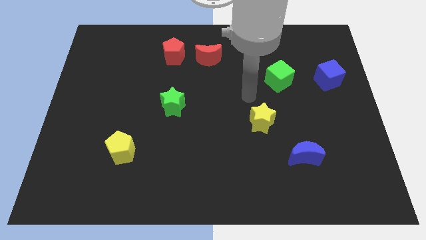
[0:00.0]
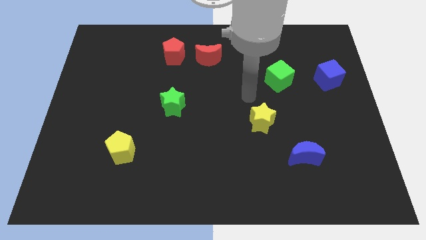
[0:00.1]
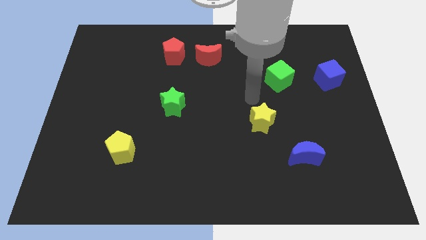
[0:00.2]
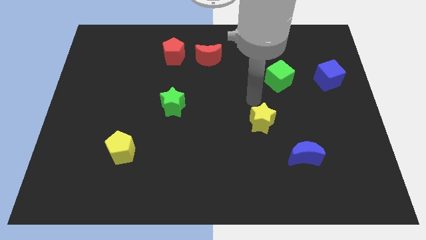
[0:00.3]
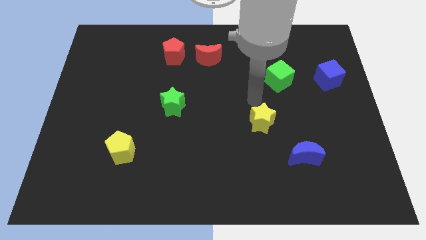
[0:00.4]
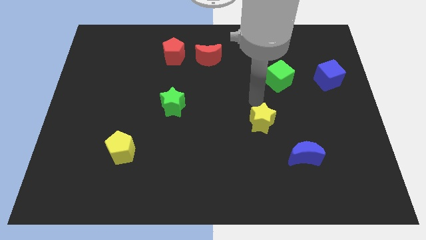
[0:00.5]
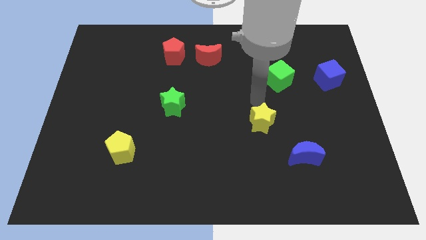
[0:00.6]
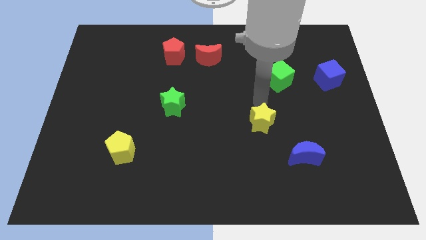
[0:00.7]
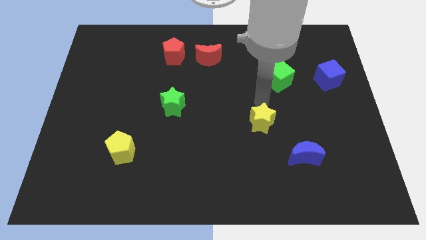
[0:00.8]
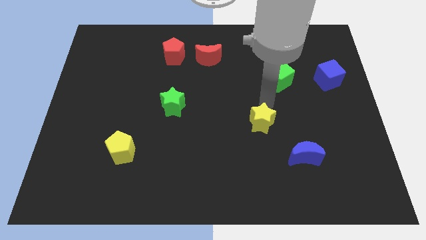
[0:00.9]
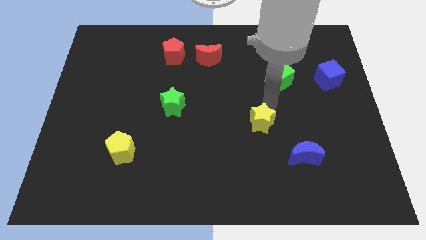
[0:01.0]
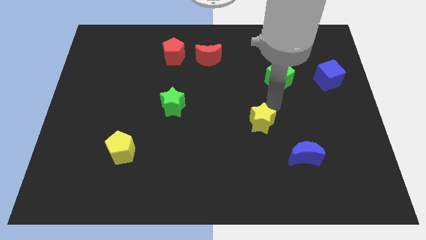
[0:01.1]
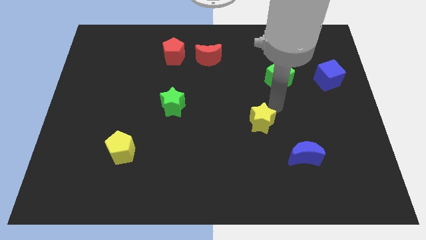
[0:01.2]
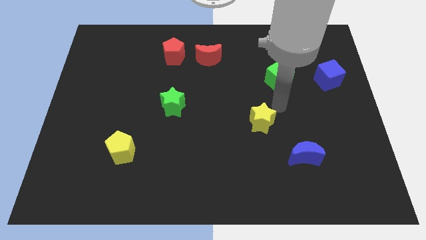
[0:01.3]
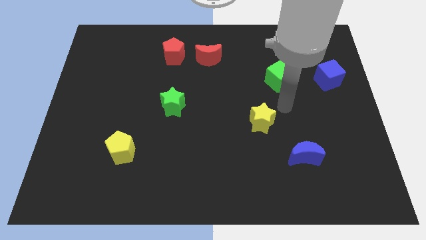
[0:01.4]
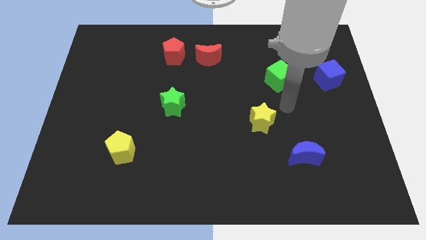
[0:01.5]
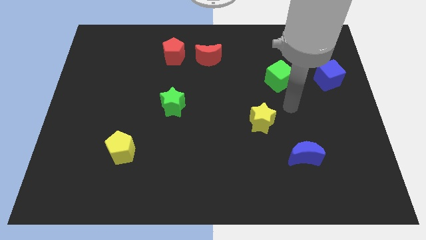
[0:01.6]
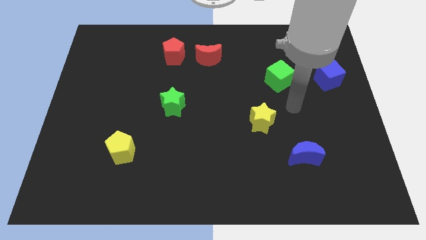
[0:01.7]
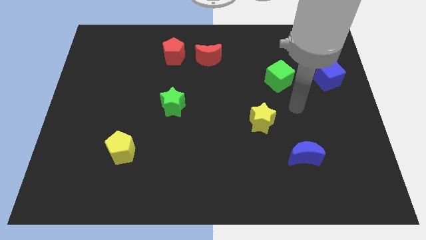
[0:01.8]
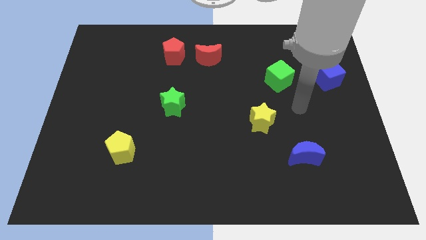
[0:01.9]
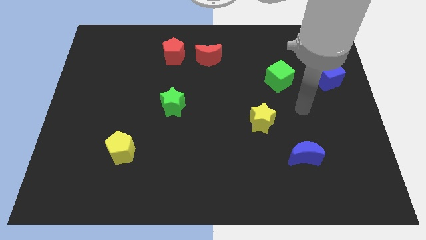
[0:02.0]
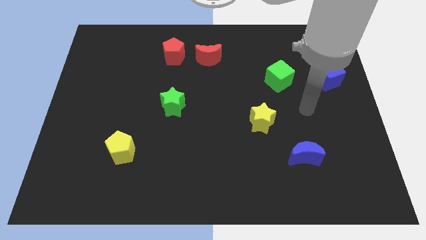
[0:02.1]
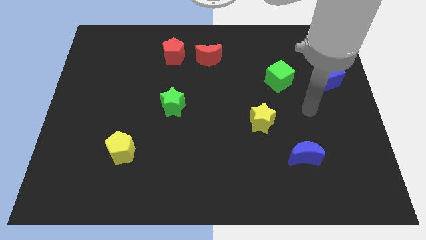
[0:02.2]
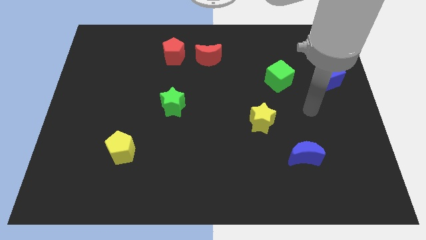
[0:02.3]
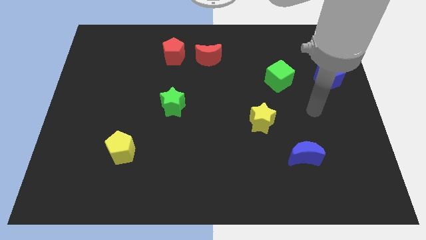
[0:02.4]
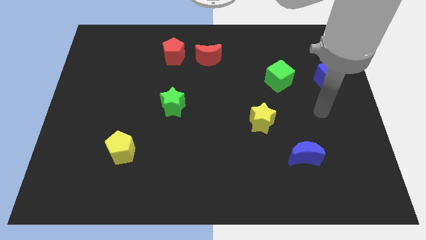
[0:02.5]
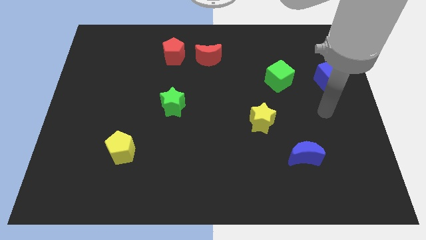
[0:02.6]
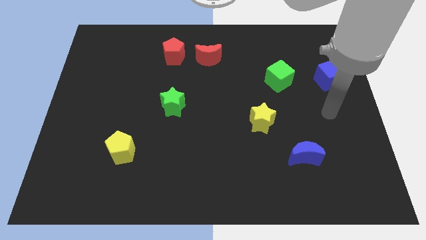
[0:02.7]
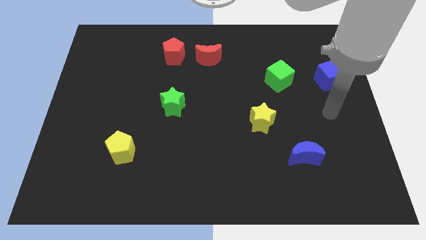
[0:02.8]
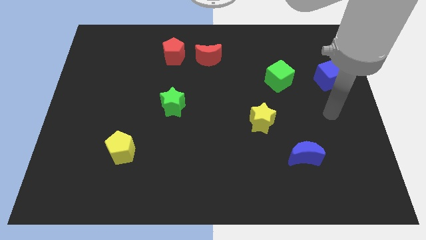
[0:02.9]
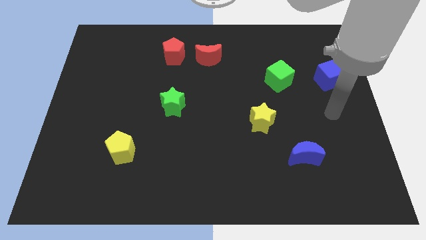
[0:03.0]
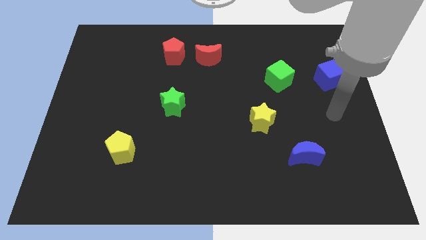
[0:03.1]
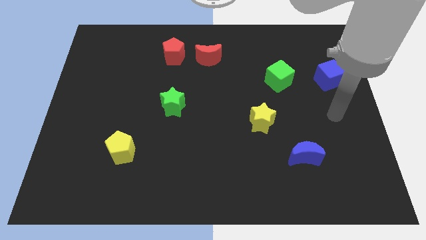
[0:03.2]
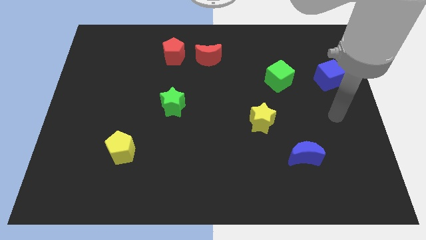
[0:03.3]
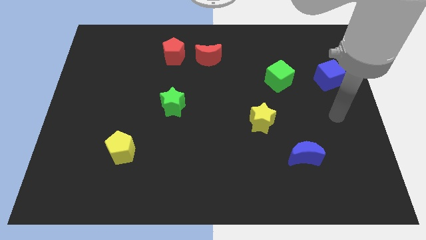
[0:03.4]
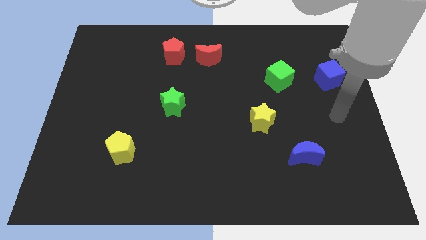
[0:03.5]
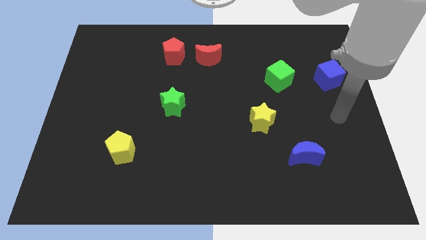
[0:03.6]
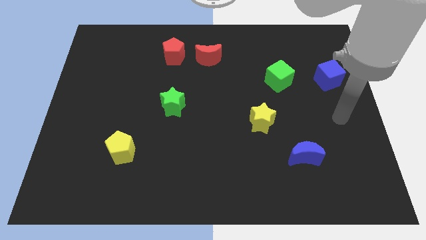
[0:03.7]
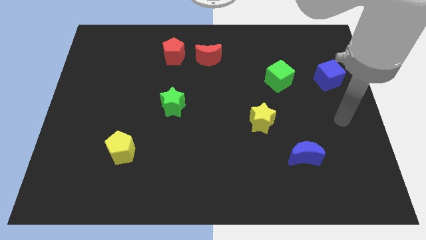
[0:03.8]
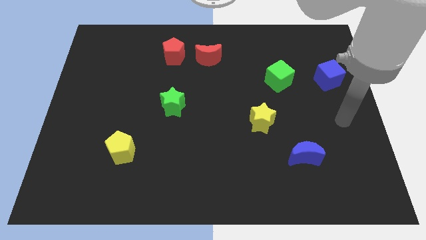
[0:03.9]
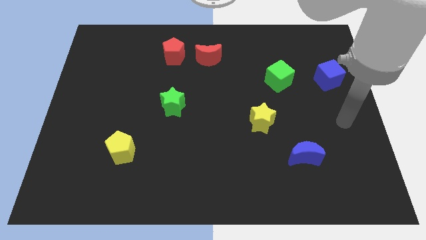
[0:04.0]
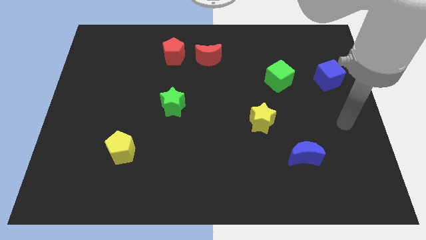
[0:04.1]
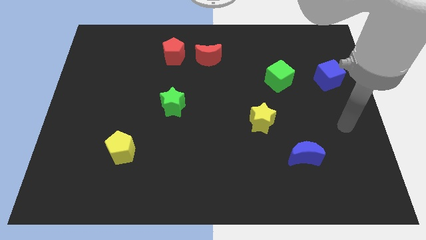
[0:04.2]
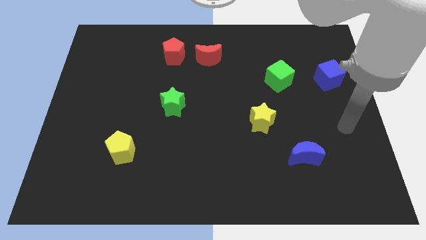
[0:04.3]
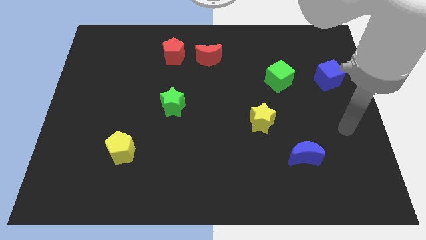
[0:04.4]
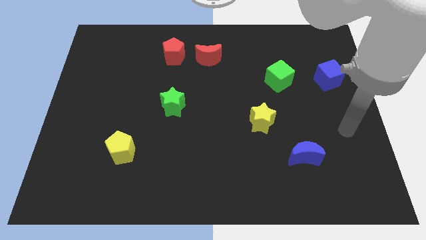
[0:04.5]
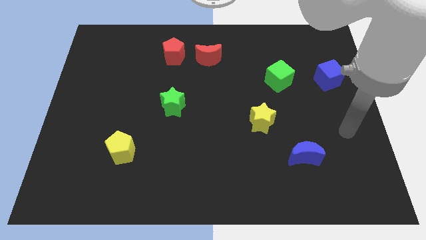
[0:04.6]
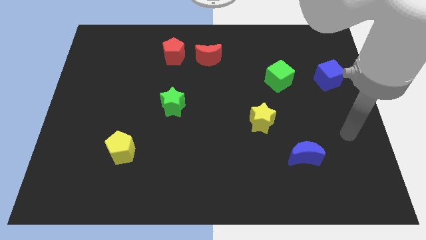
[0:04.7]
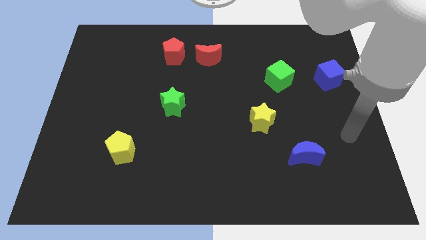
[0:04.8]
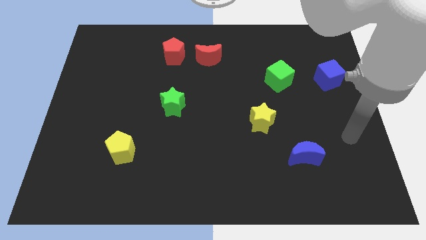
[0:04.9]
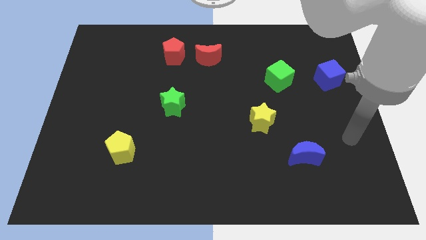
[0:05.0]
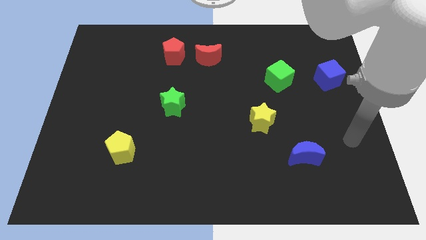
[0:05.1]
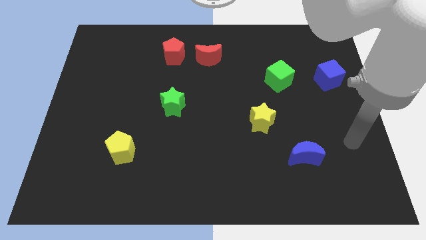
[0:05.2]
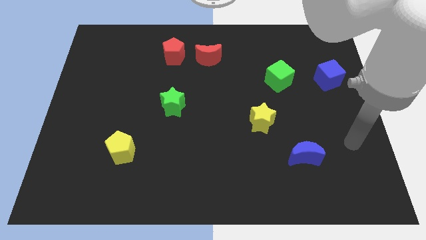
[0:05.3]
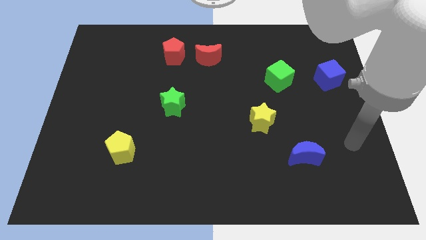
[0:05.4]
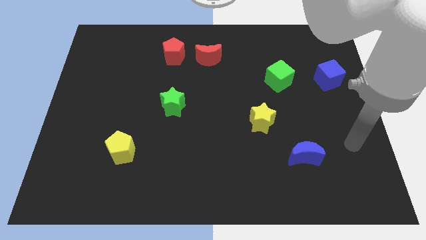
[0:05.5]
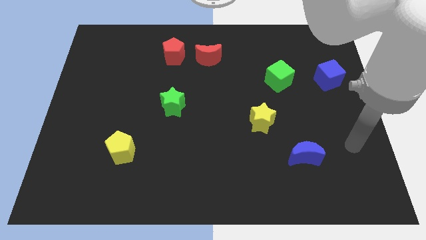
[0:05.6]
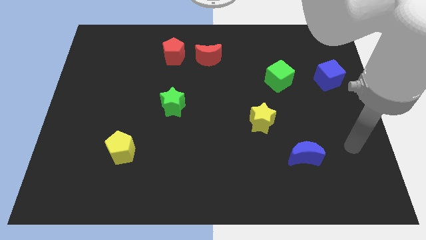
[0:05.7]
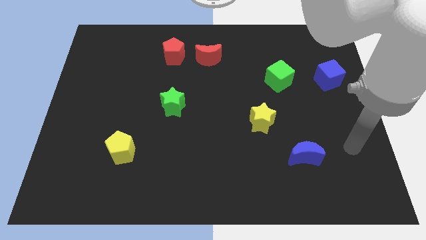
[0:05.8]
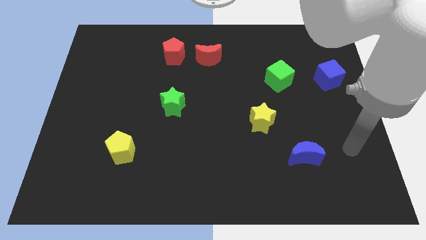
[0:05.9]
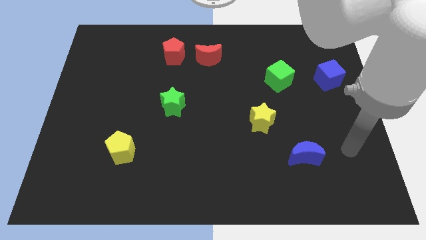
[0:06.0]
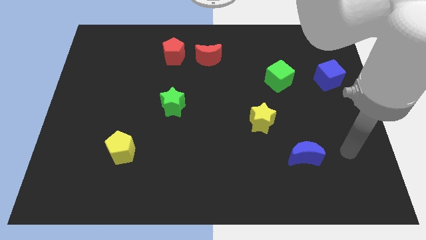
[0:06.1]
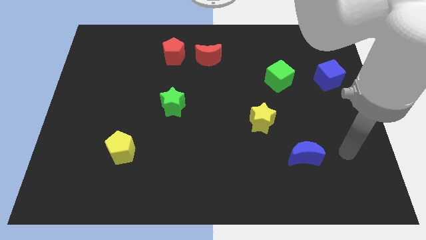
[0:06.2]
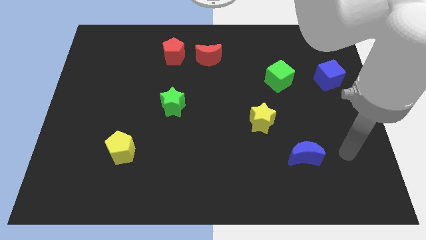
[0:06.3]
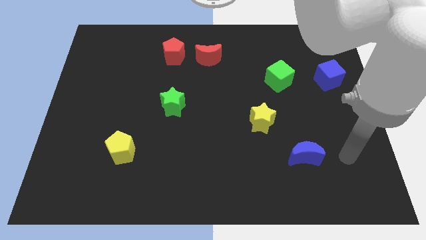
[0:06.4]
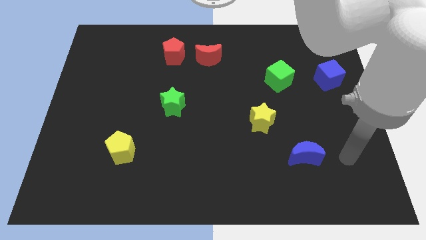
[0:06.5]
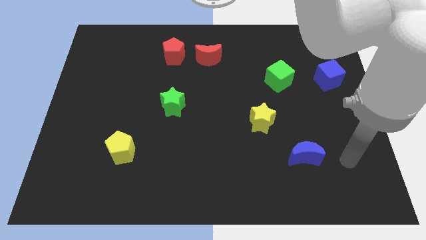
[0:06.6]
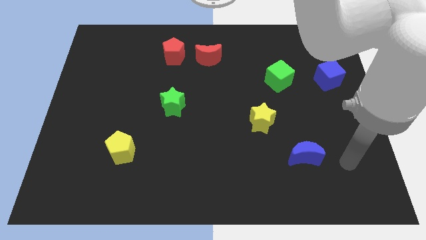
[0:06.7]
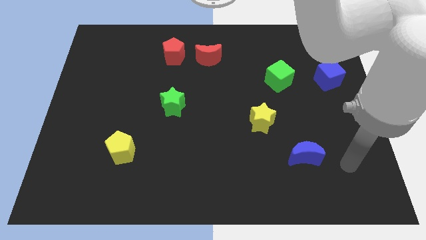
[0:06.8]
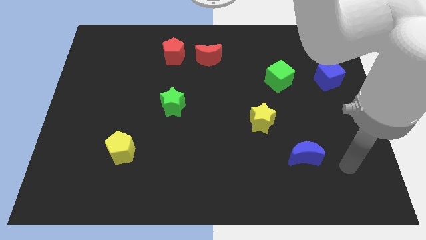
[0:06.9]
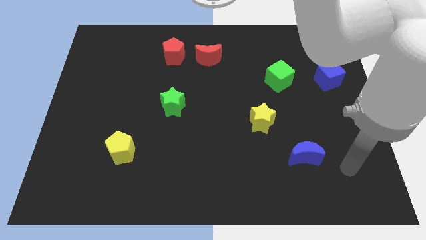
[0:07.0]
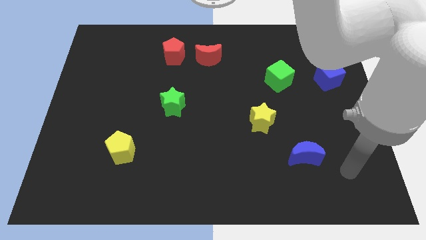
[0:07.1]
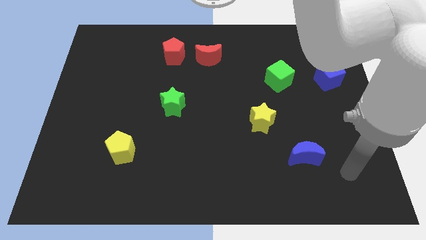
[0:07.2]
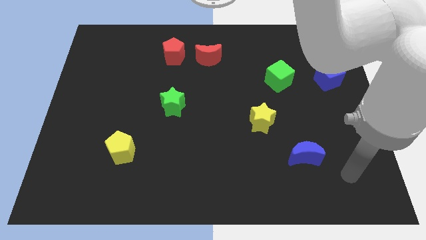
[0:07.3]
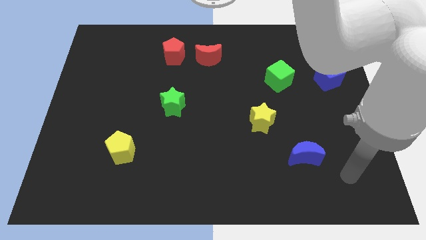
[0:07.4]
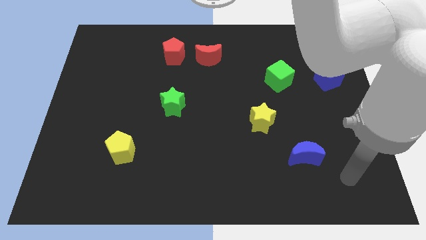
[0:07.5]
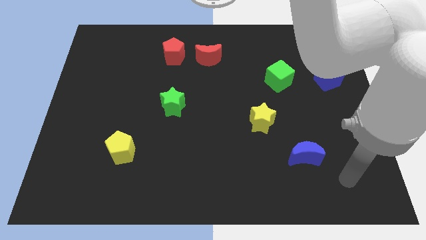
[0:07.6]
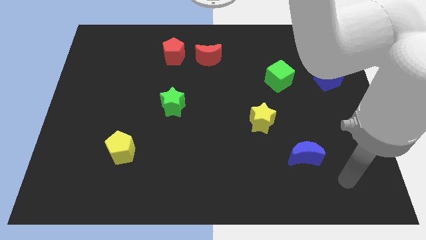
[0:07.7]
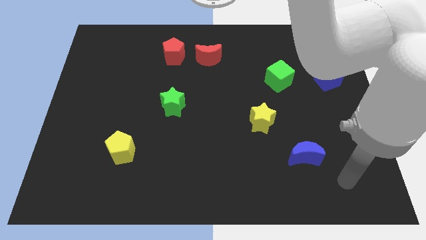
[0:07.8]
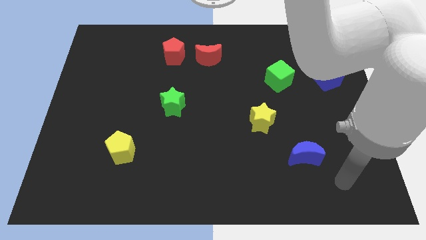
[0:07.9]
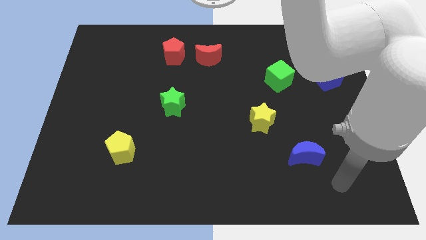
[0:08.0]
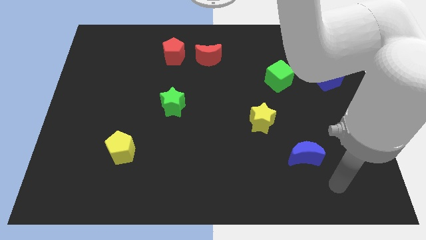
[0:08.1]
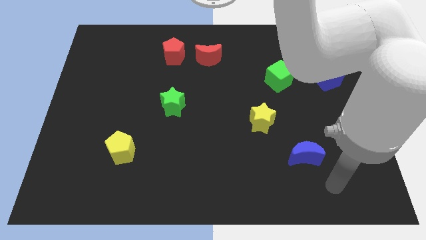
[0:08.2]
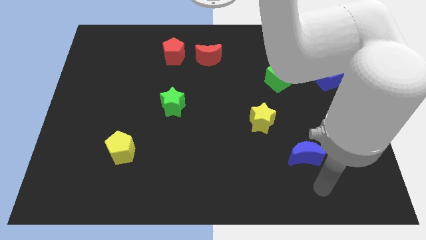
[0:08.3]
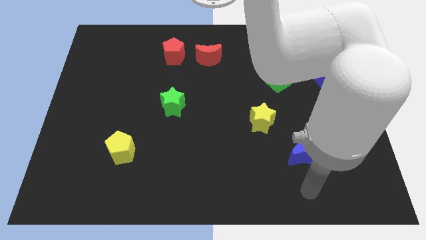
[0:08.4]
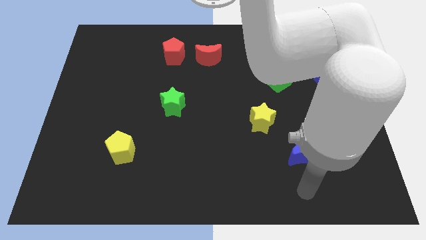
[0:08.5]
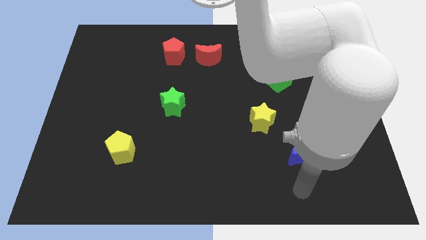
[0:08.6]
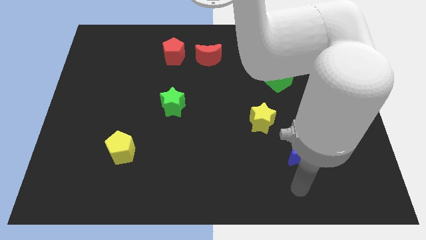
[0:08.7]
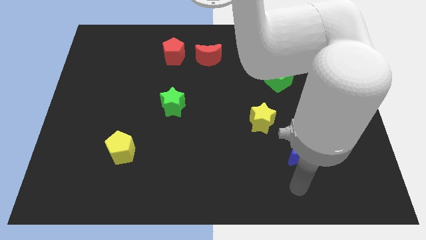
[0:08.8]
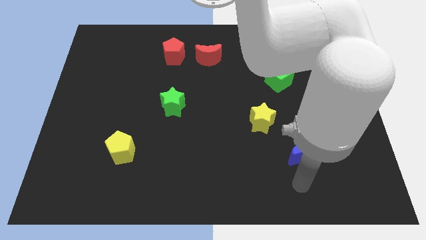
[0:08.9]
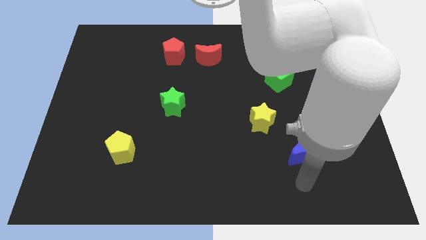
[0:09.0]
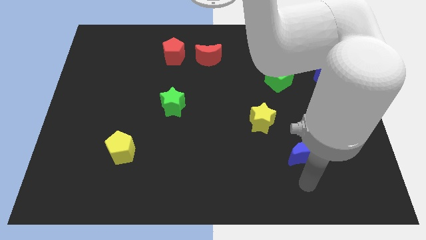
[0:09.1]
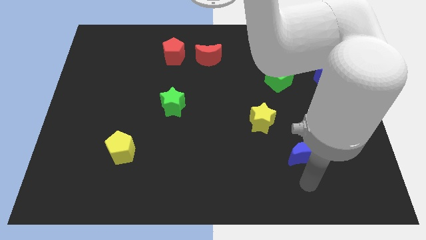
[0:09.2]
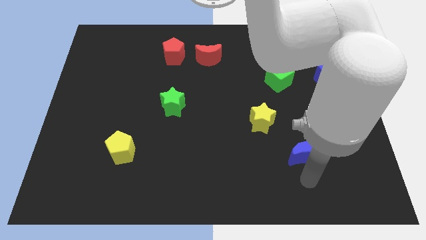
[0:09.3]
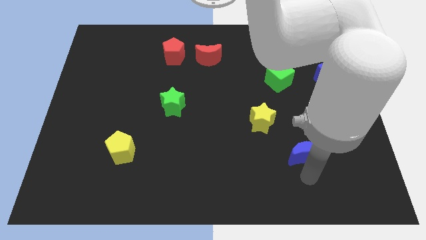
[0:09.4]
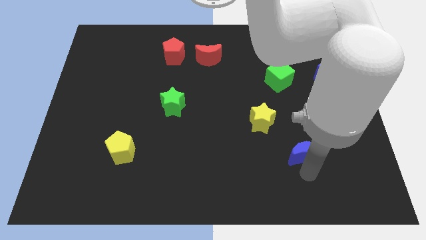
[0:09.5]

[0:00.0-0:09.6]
move your arm to the bottom of the blue crescent
